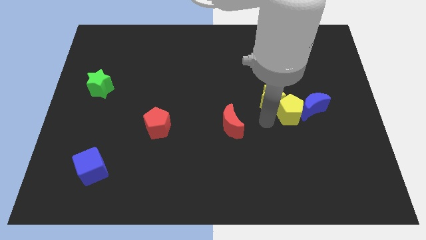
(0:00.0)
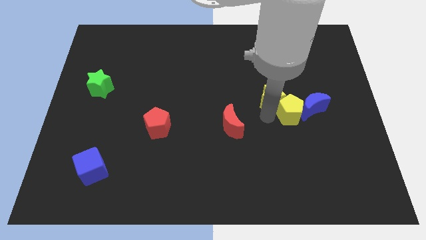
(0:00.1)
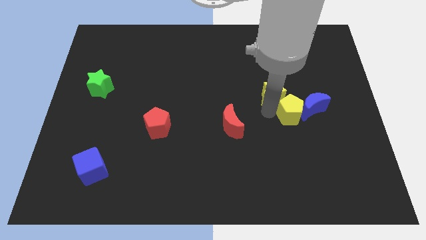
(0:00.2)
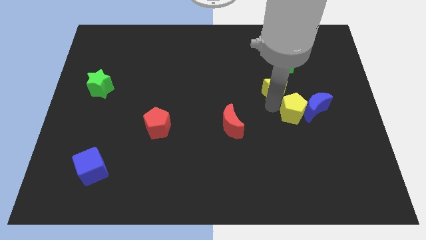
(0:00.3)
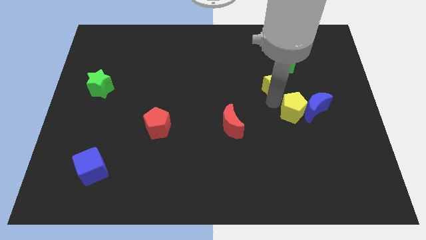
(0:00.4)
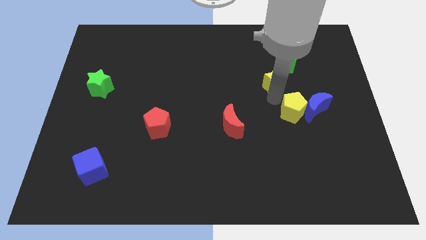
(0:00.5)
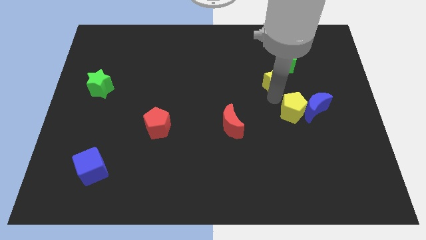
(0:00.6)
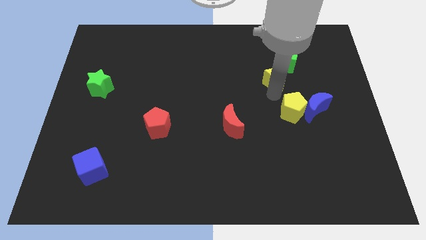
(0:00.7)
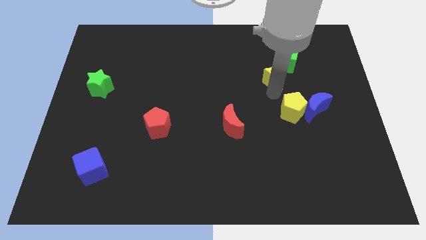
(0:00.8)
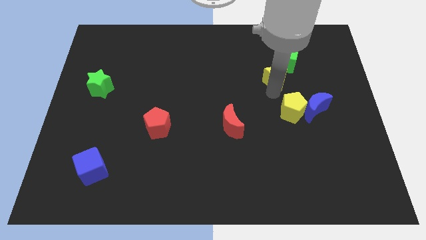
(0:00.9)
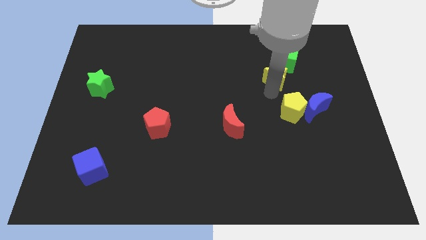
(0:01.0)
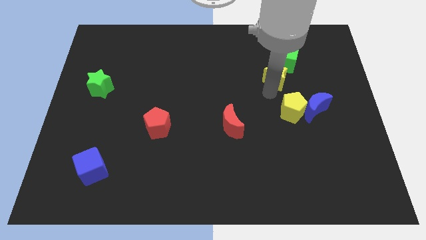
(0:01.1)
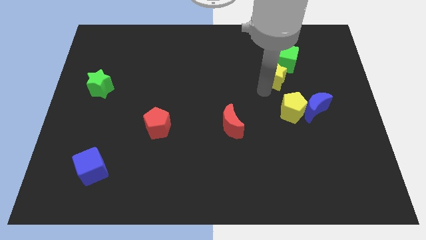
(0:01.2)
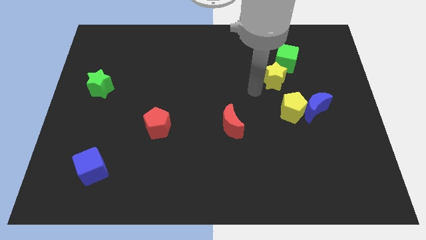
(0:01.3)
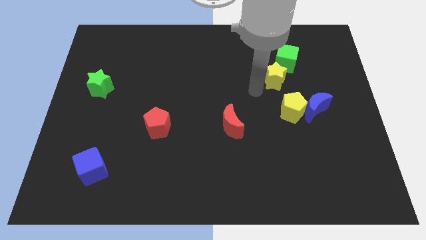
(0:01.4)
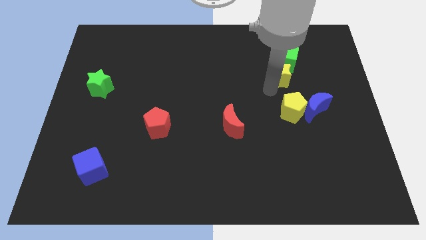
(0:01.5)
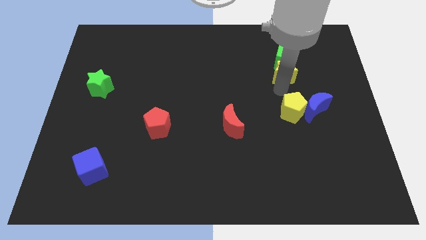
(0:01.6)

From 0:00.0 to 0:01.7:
move the yellow star vertically above the yellow pentagon

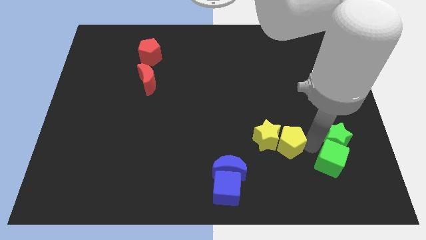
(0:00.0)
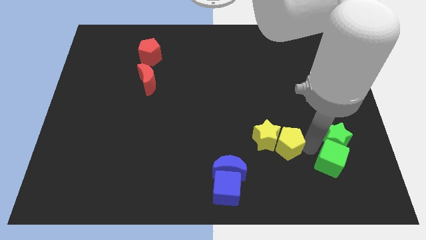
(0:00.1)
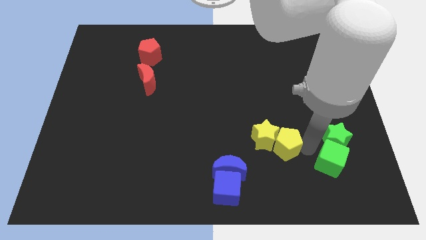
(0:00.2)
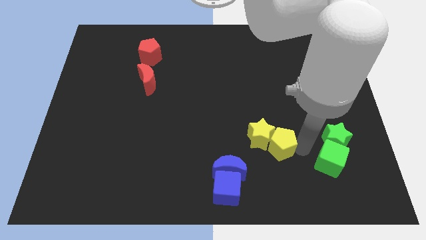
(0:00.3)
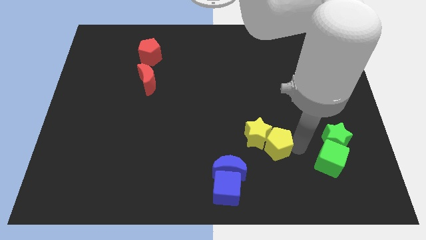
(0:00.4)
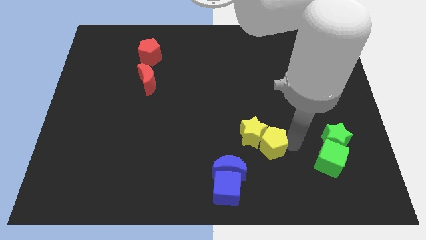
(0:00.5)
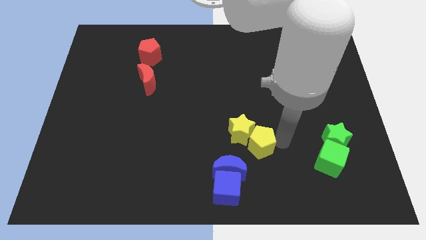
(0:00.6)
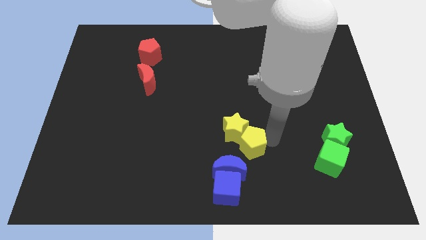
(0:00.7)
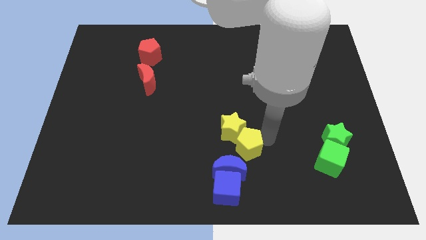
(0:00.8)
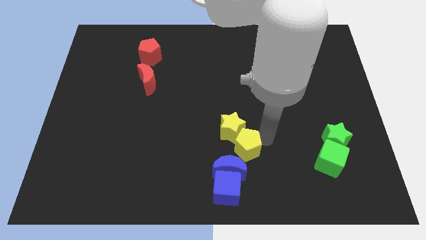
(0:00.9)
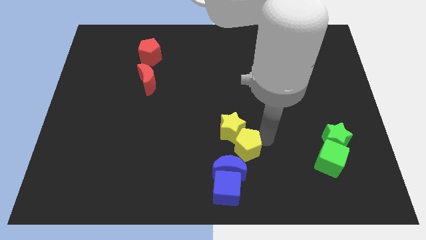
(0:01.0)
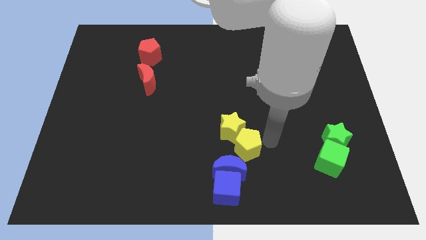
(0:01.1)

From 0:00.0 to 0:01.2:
move the yellow blocks above the blue blocks

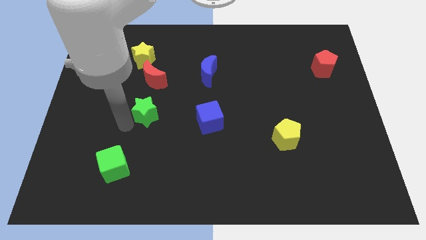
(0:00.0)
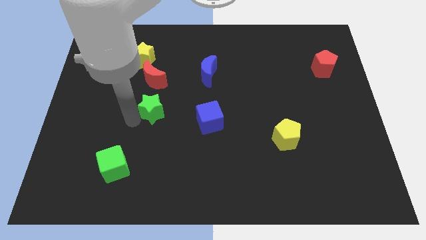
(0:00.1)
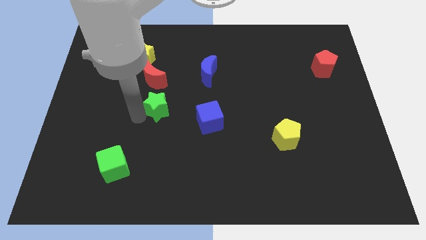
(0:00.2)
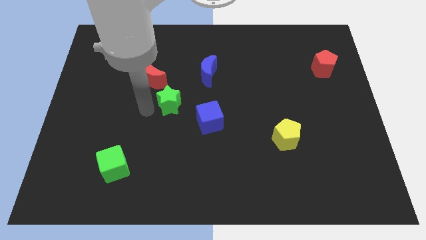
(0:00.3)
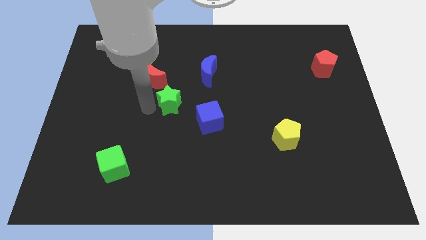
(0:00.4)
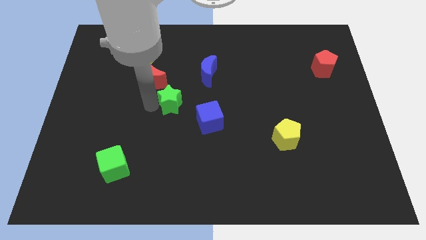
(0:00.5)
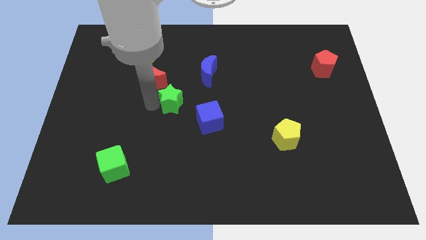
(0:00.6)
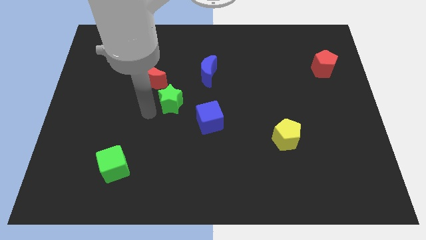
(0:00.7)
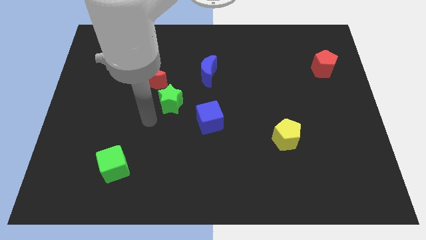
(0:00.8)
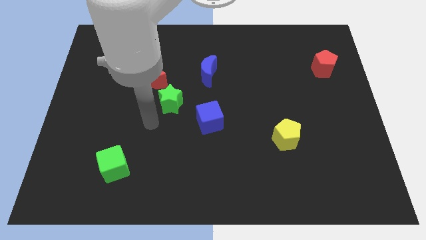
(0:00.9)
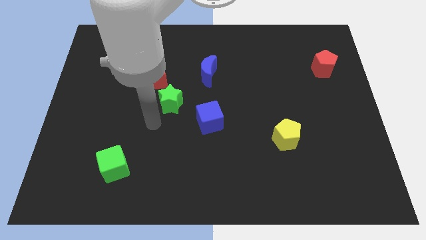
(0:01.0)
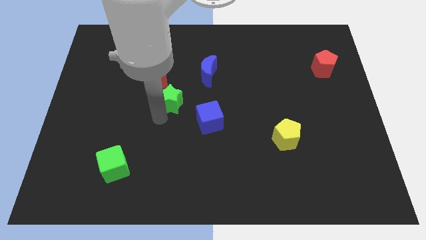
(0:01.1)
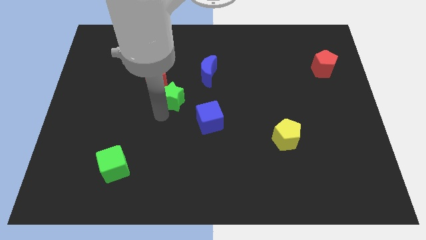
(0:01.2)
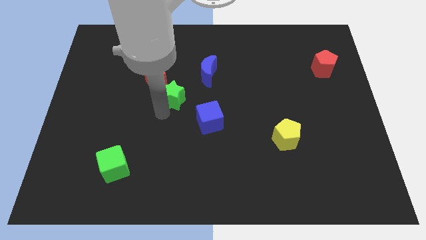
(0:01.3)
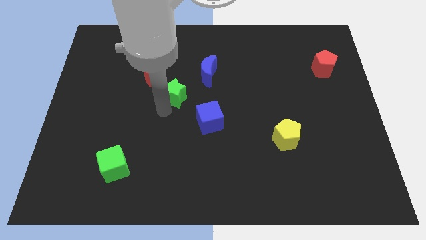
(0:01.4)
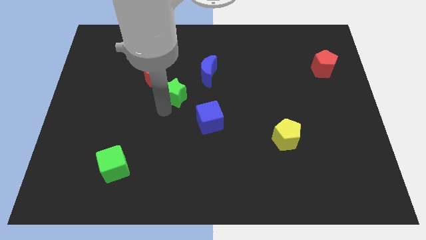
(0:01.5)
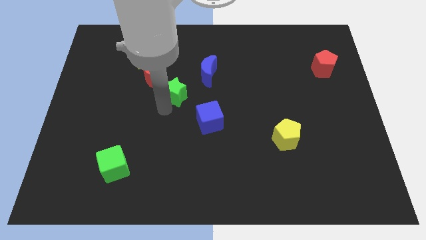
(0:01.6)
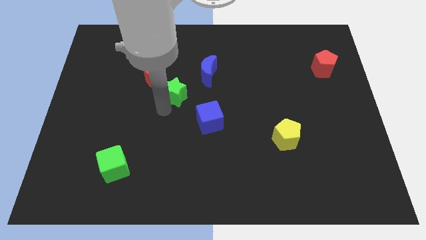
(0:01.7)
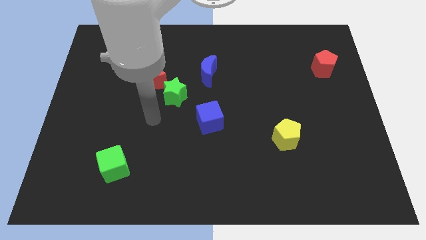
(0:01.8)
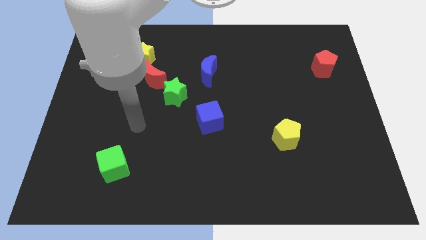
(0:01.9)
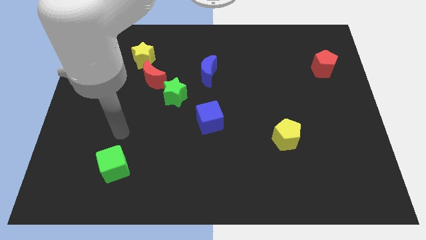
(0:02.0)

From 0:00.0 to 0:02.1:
move the green star to the bottom right side of the red crescent

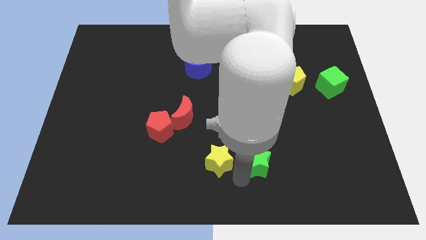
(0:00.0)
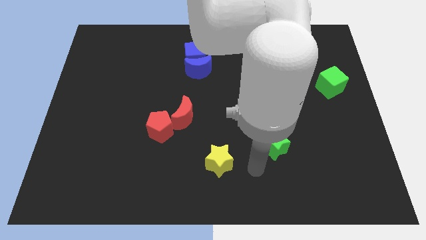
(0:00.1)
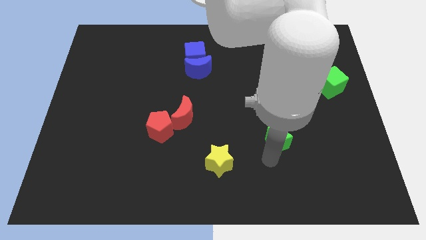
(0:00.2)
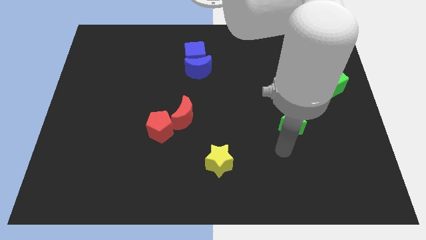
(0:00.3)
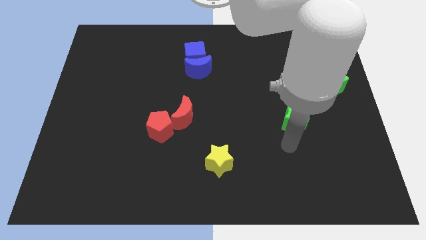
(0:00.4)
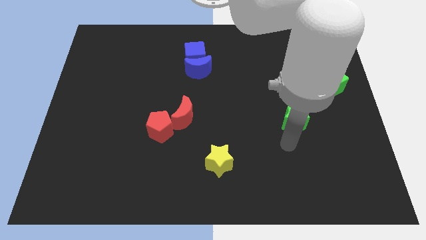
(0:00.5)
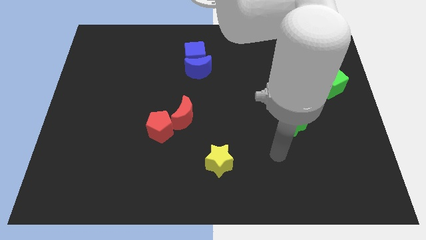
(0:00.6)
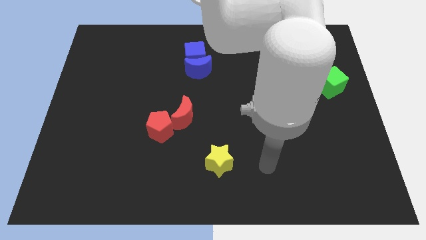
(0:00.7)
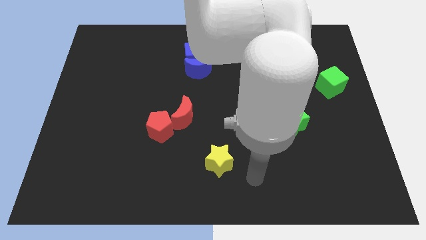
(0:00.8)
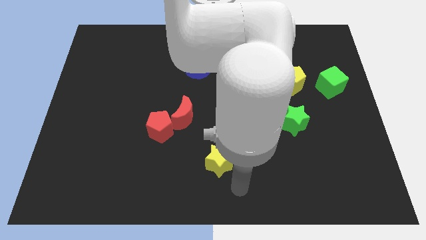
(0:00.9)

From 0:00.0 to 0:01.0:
separate the green star from yellow star

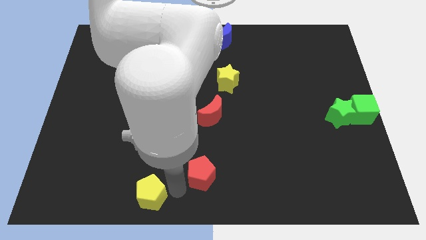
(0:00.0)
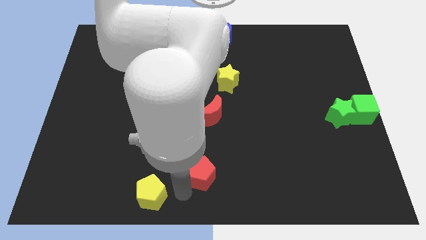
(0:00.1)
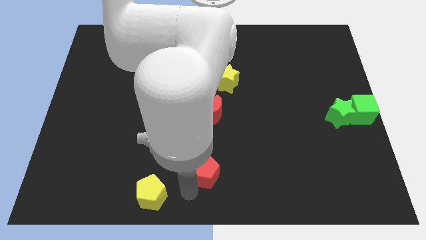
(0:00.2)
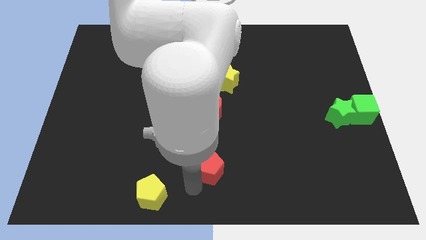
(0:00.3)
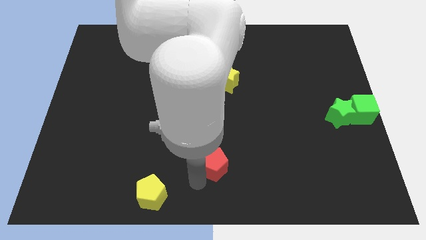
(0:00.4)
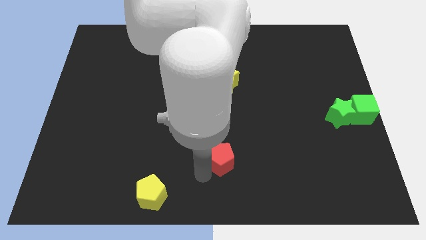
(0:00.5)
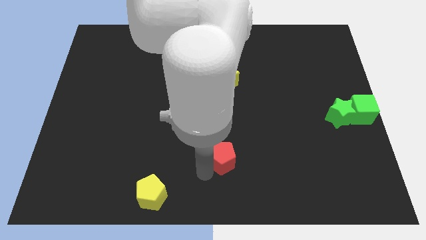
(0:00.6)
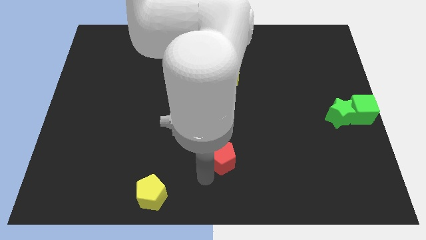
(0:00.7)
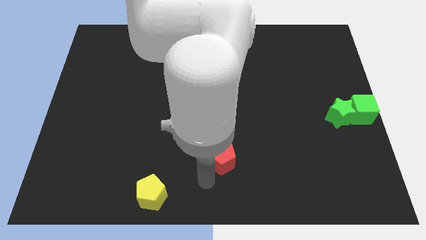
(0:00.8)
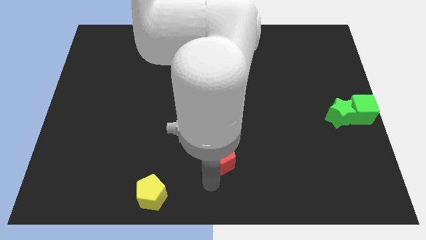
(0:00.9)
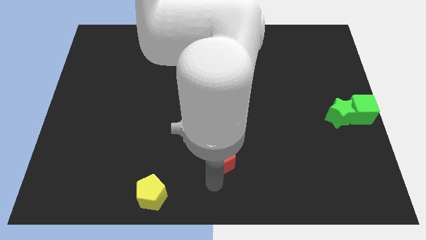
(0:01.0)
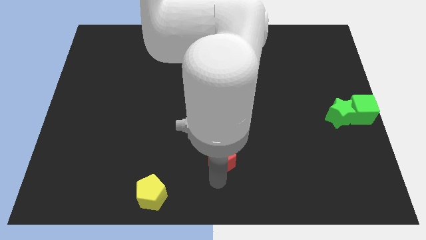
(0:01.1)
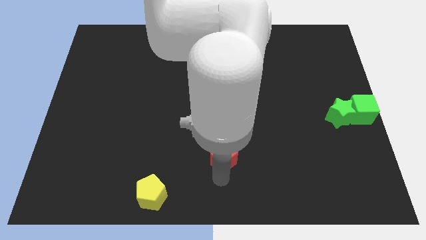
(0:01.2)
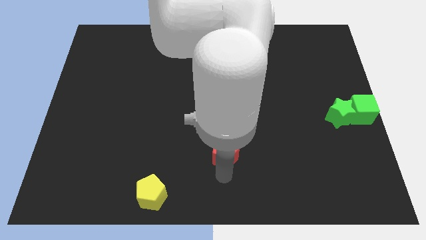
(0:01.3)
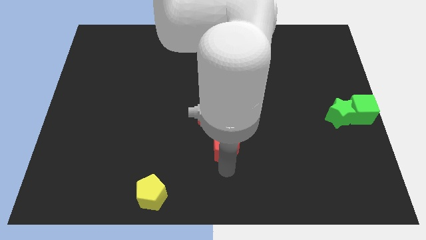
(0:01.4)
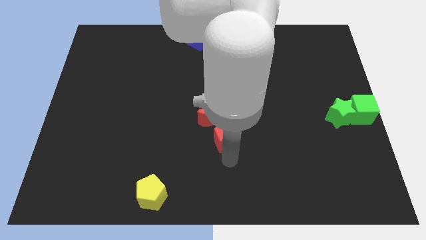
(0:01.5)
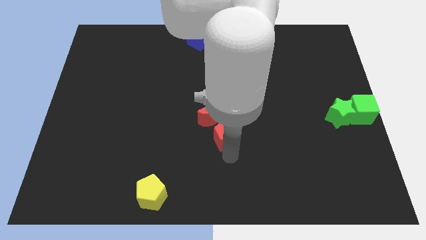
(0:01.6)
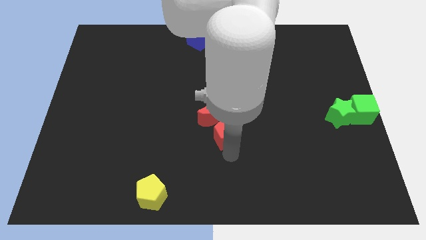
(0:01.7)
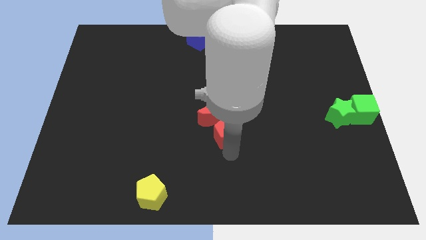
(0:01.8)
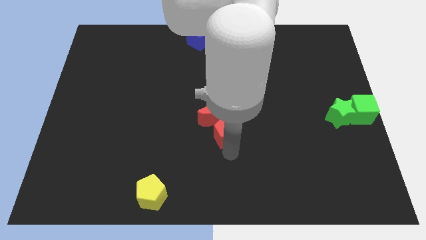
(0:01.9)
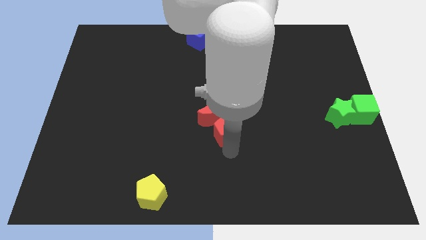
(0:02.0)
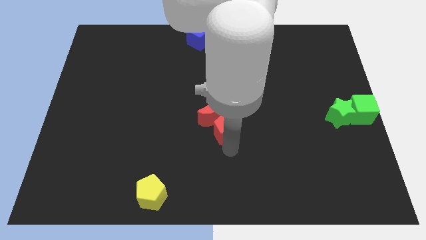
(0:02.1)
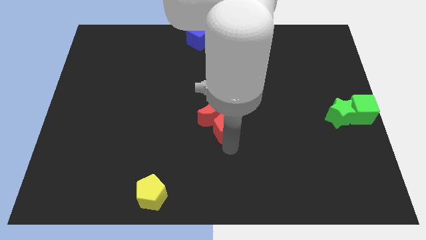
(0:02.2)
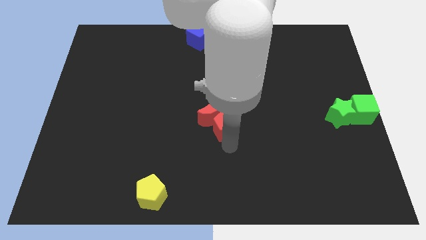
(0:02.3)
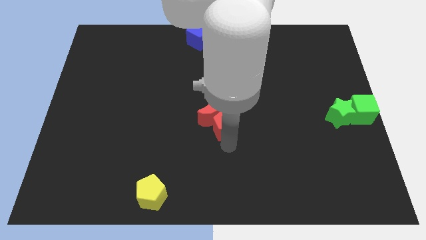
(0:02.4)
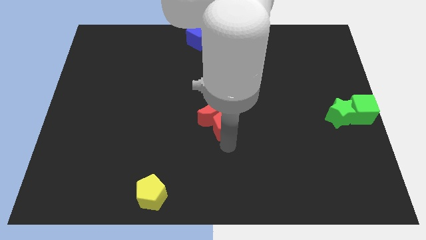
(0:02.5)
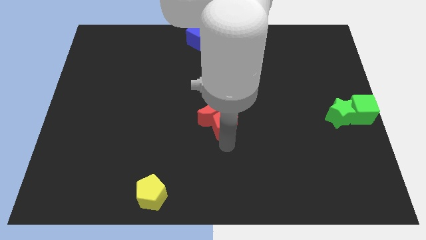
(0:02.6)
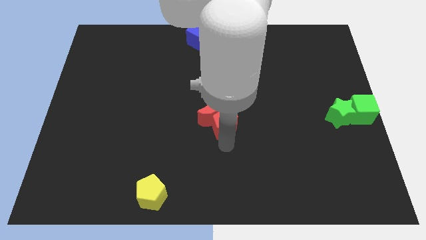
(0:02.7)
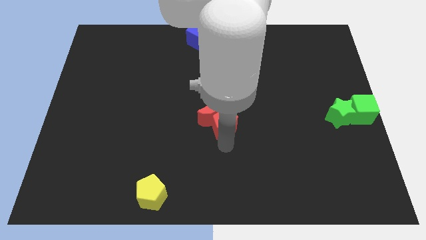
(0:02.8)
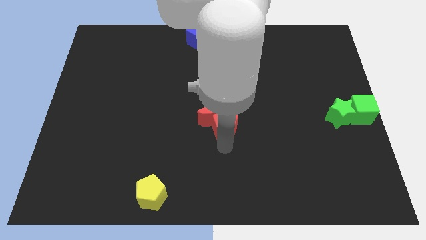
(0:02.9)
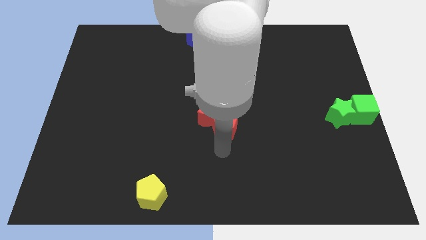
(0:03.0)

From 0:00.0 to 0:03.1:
move the red pentagon below the red crescent
